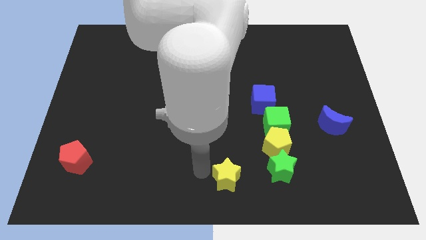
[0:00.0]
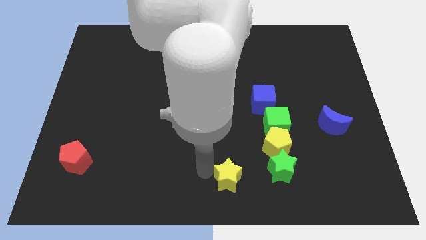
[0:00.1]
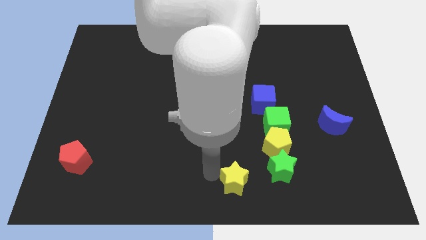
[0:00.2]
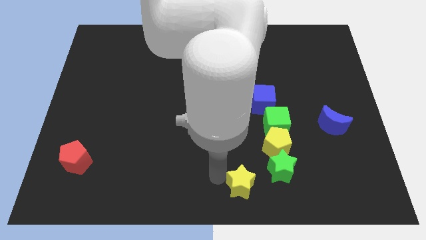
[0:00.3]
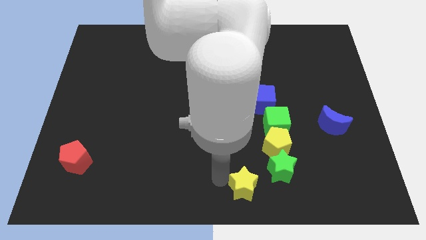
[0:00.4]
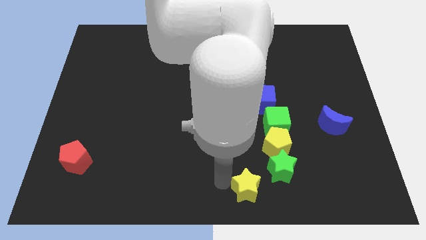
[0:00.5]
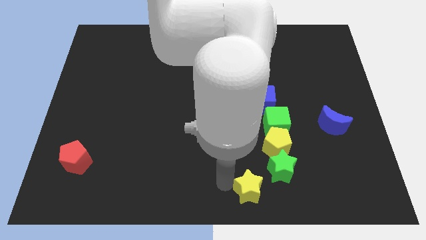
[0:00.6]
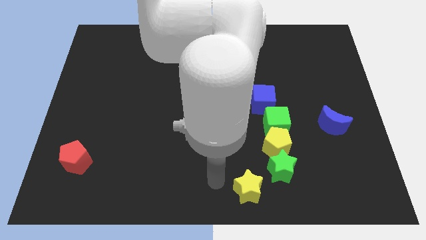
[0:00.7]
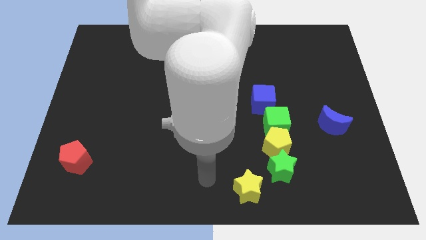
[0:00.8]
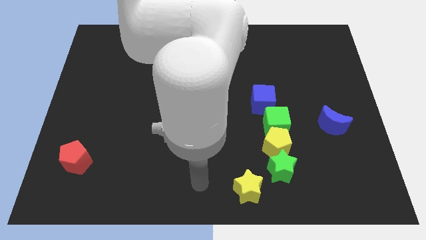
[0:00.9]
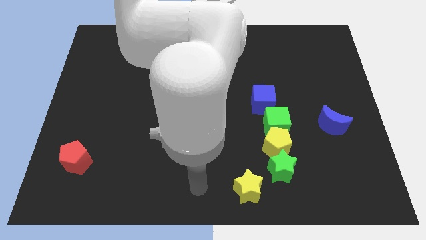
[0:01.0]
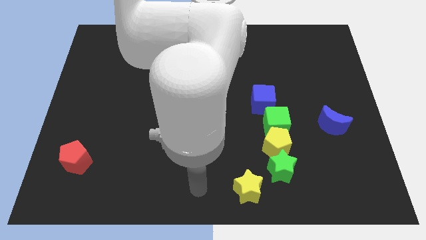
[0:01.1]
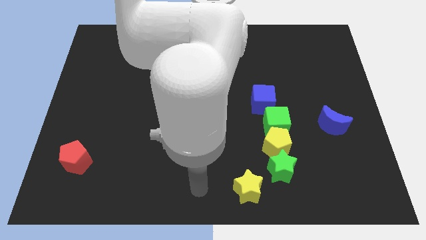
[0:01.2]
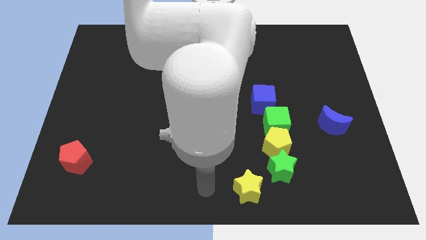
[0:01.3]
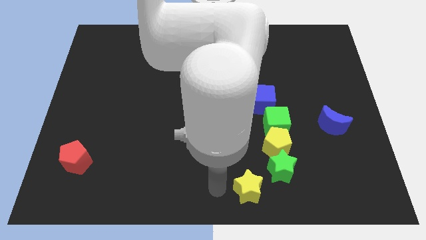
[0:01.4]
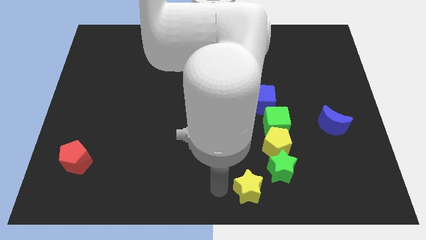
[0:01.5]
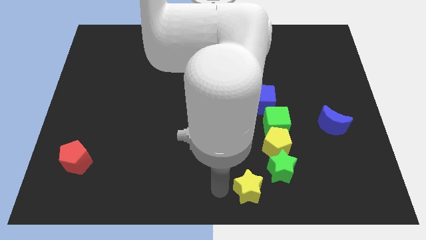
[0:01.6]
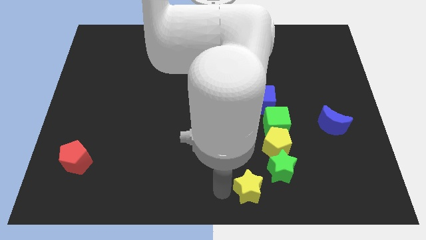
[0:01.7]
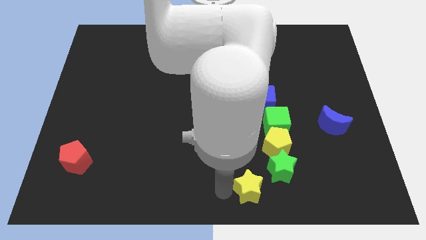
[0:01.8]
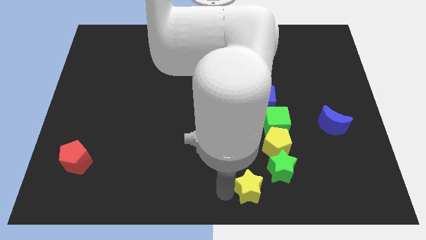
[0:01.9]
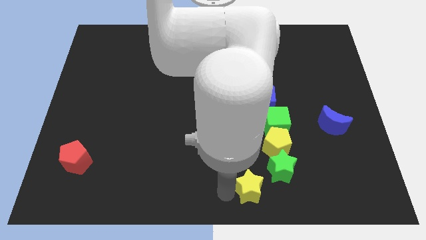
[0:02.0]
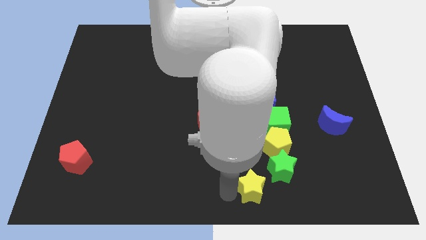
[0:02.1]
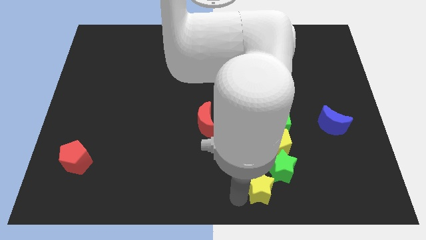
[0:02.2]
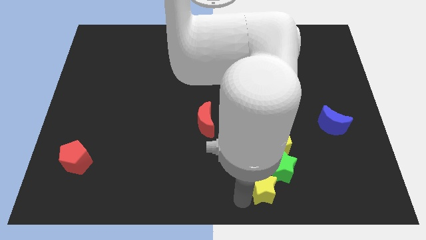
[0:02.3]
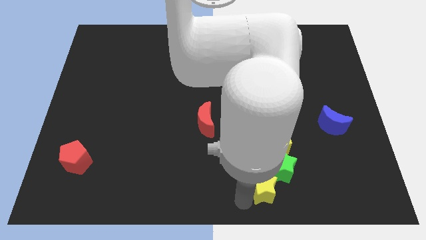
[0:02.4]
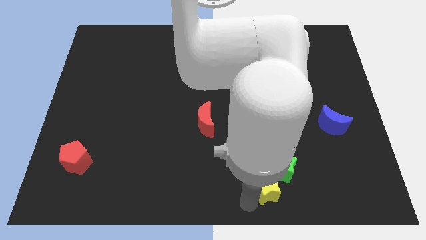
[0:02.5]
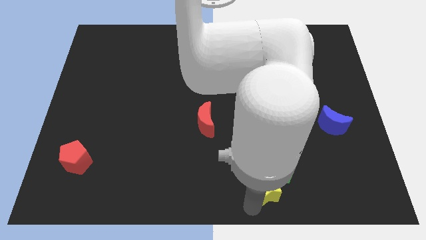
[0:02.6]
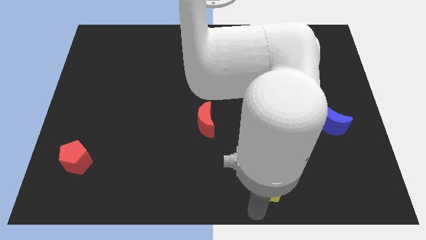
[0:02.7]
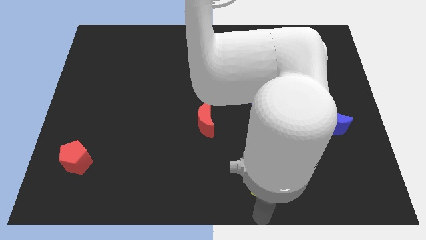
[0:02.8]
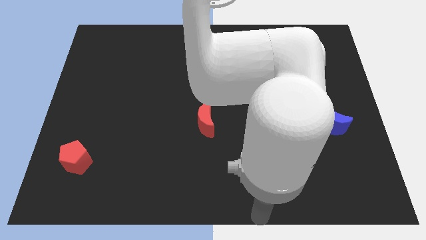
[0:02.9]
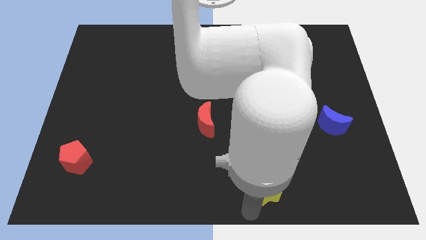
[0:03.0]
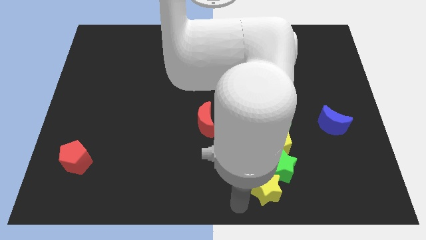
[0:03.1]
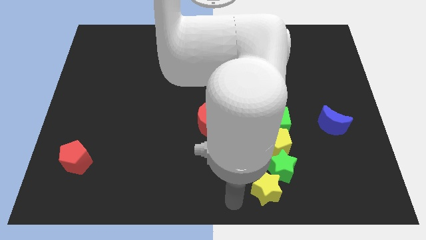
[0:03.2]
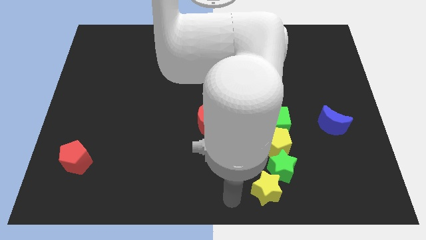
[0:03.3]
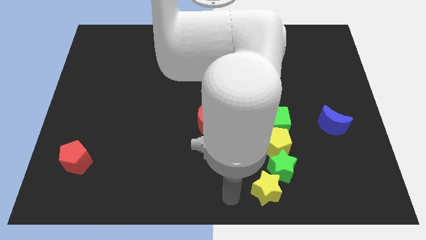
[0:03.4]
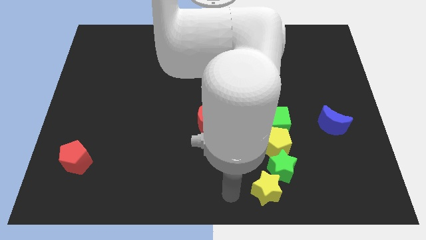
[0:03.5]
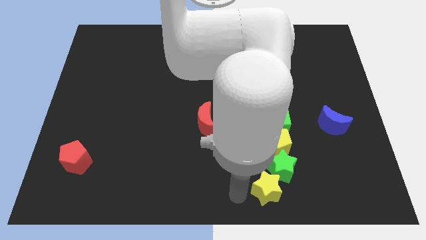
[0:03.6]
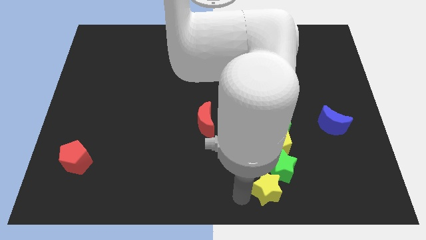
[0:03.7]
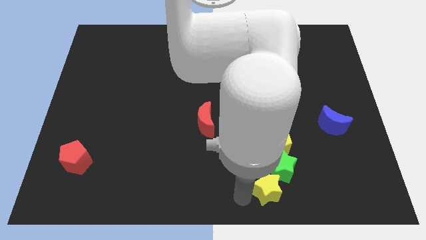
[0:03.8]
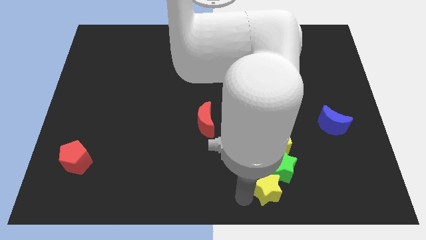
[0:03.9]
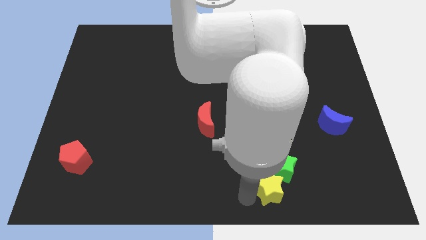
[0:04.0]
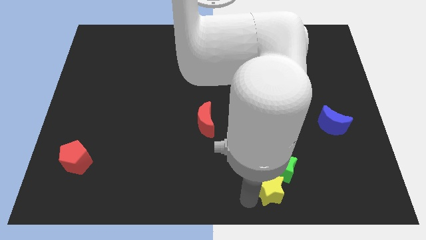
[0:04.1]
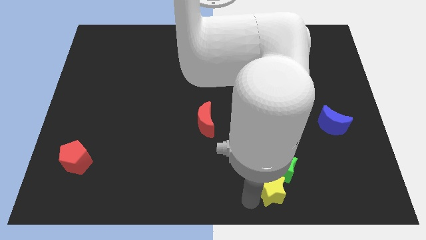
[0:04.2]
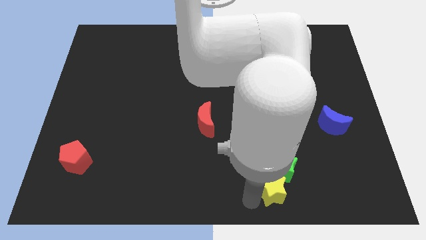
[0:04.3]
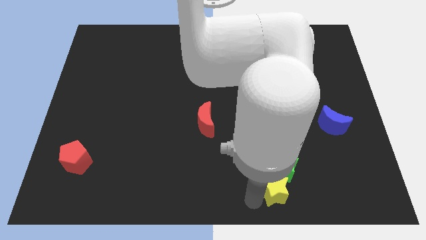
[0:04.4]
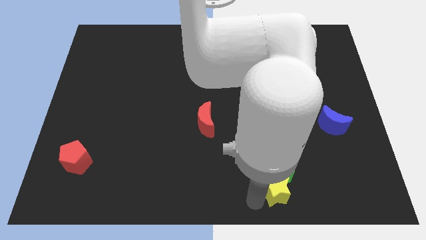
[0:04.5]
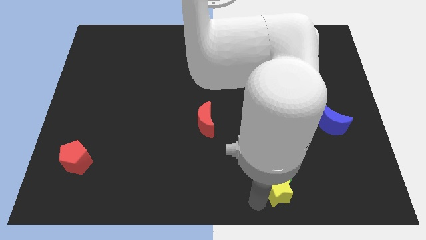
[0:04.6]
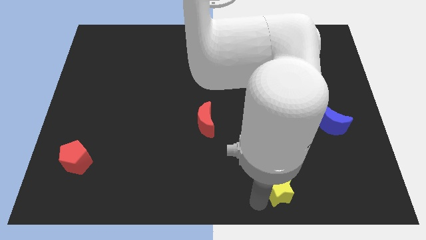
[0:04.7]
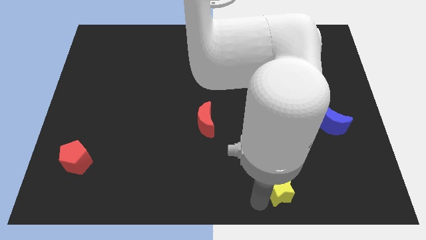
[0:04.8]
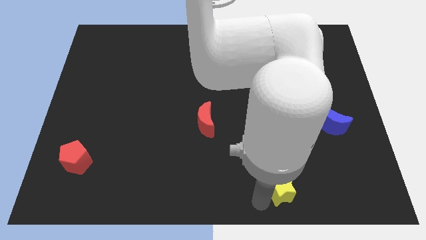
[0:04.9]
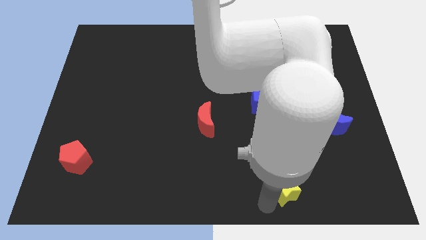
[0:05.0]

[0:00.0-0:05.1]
place the yellow star beside the green star

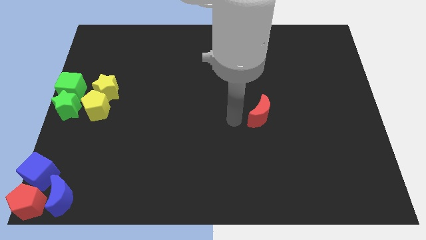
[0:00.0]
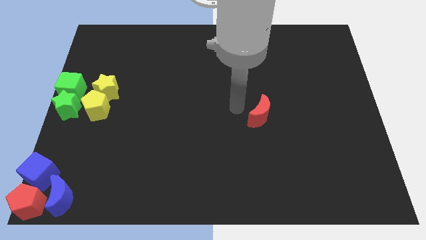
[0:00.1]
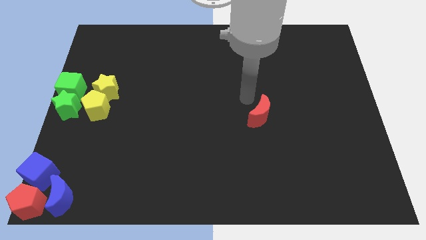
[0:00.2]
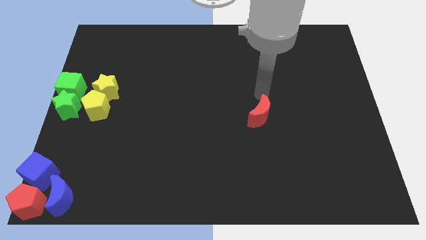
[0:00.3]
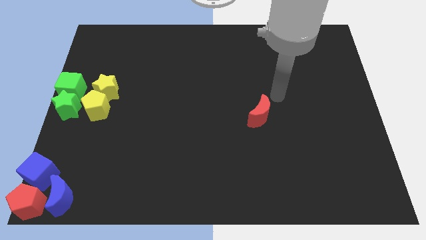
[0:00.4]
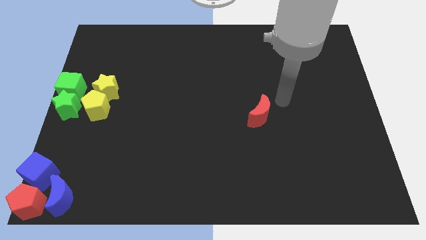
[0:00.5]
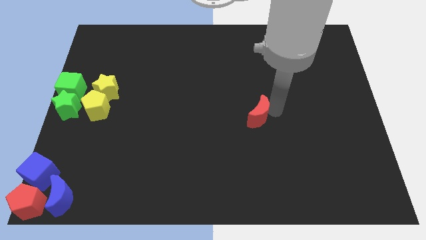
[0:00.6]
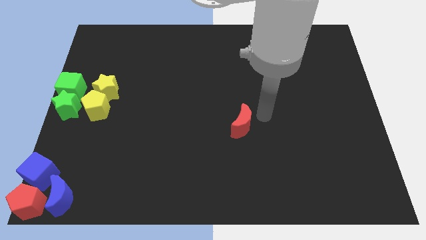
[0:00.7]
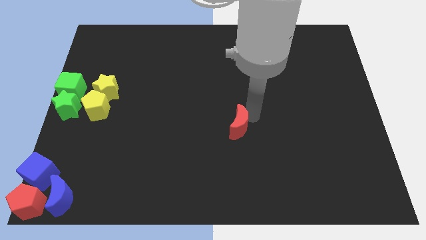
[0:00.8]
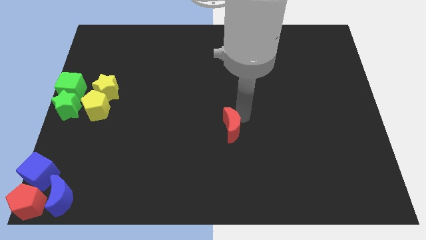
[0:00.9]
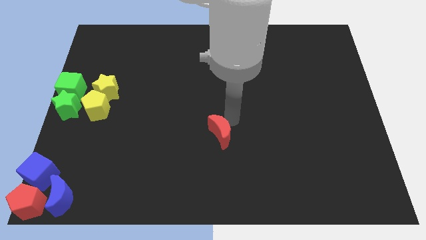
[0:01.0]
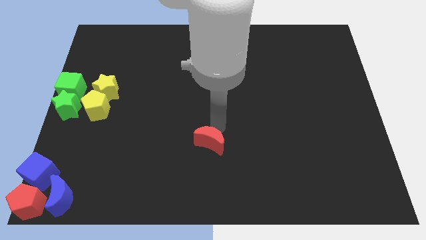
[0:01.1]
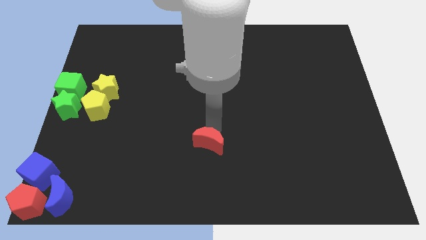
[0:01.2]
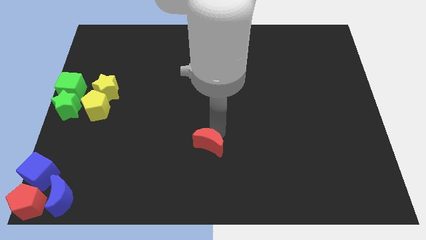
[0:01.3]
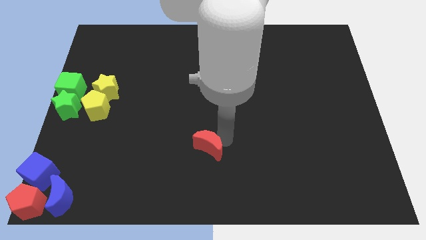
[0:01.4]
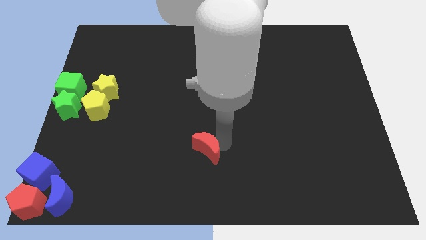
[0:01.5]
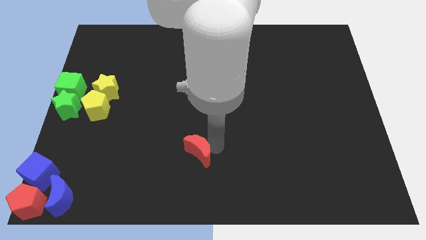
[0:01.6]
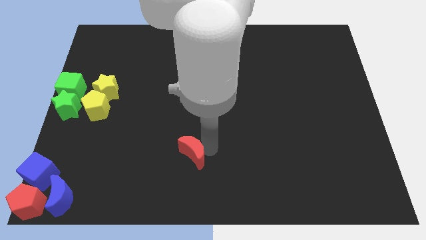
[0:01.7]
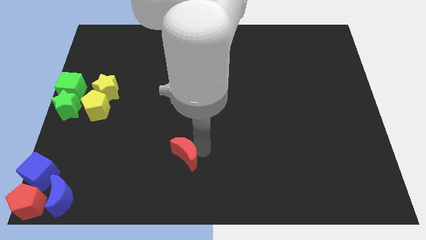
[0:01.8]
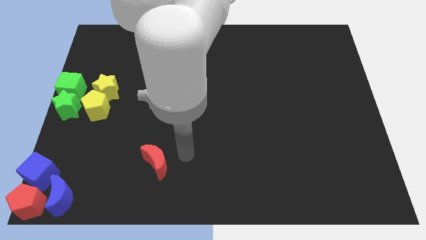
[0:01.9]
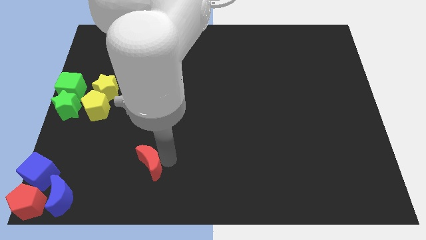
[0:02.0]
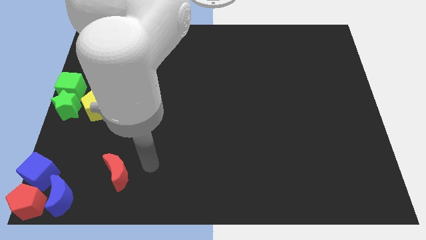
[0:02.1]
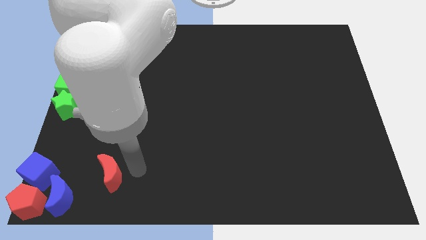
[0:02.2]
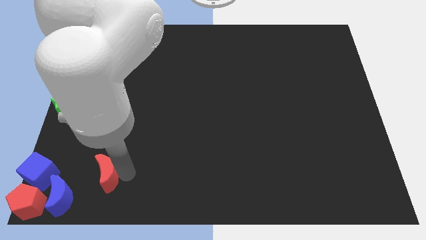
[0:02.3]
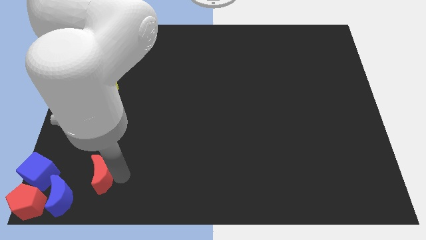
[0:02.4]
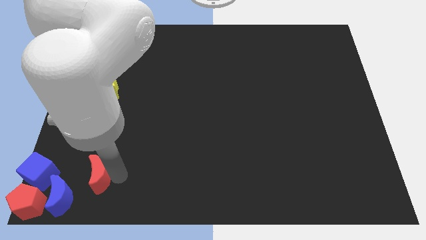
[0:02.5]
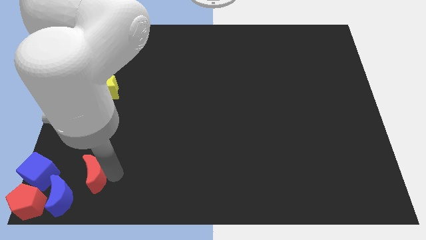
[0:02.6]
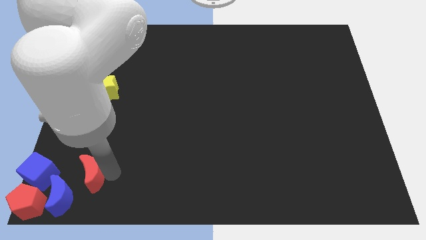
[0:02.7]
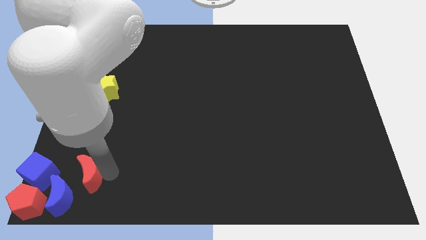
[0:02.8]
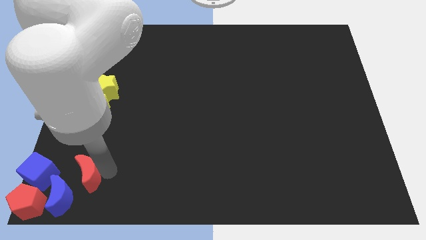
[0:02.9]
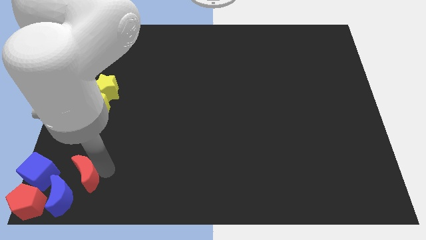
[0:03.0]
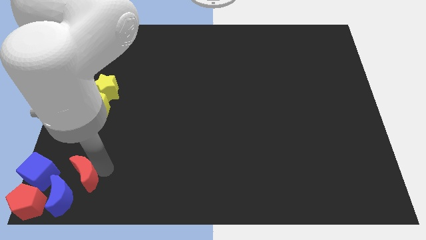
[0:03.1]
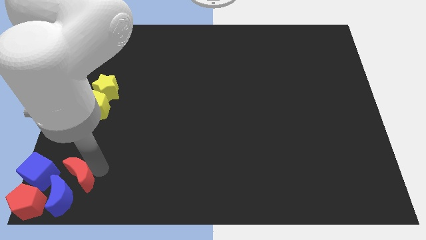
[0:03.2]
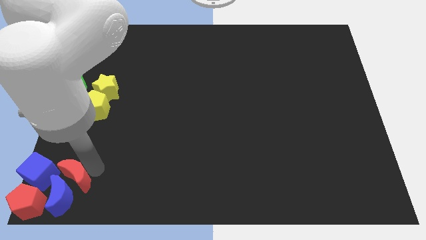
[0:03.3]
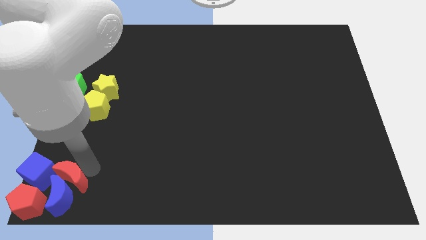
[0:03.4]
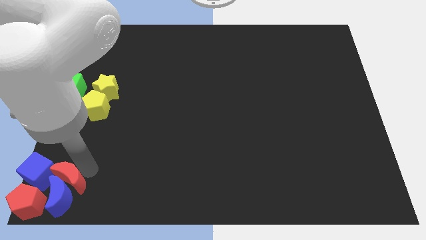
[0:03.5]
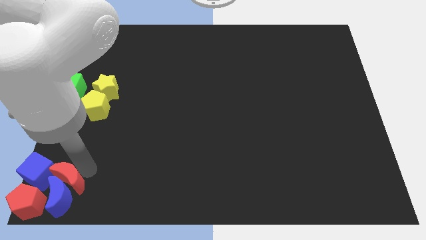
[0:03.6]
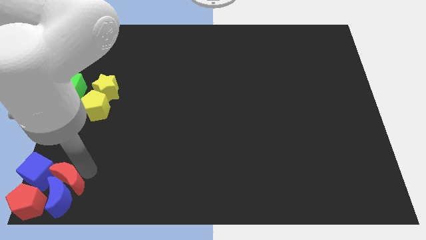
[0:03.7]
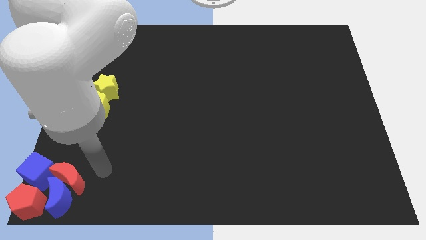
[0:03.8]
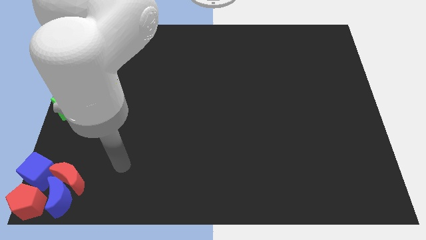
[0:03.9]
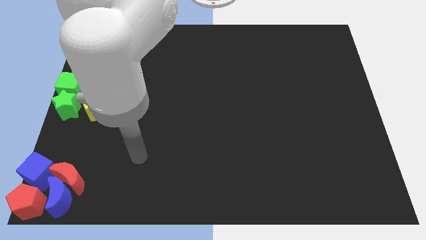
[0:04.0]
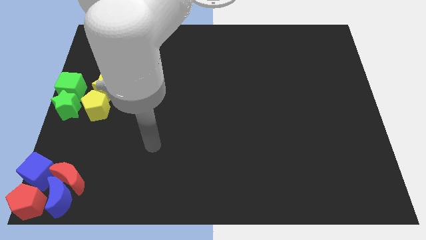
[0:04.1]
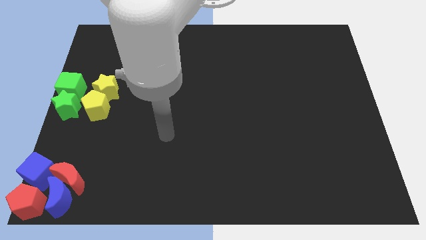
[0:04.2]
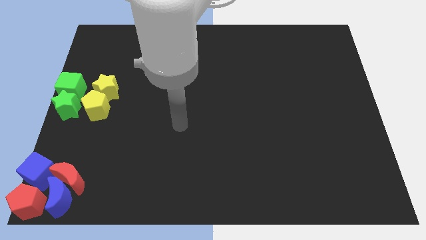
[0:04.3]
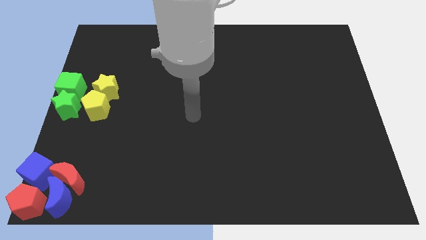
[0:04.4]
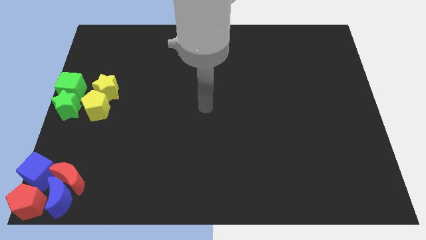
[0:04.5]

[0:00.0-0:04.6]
move the red crescent to the top of the blue crescent
